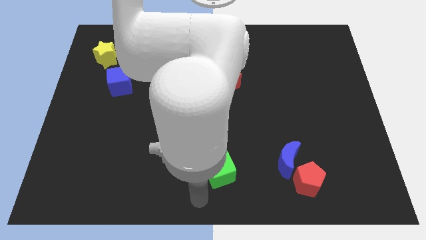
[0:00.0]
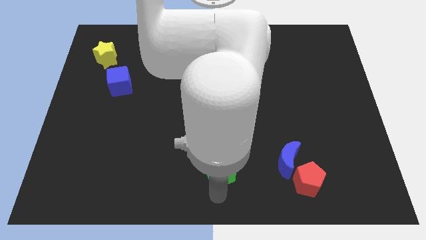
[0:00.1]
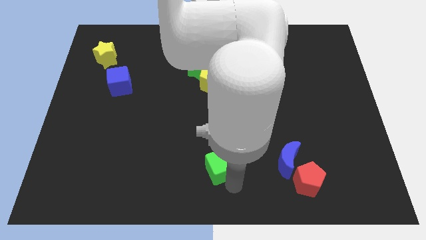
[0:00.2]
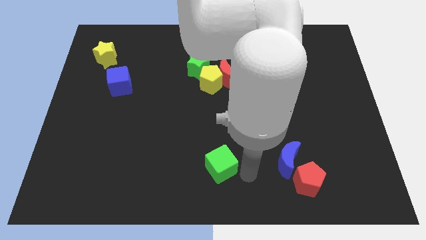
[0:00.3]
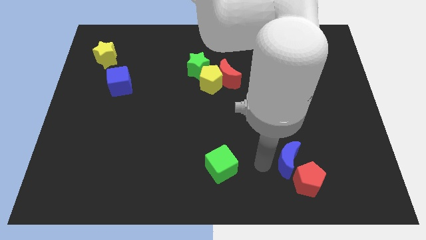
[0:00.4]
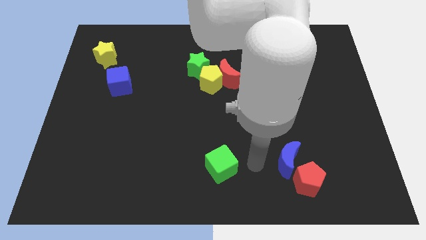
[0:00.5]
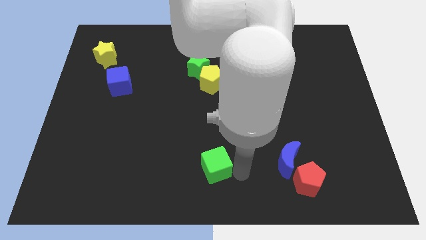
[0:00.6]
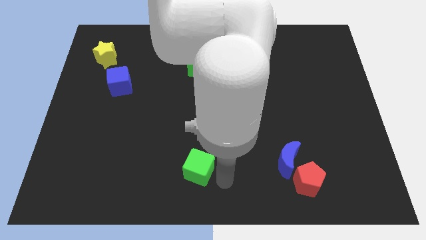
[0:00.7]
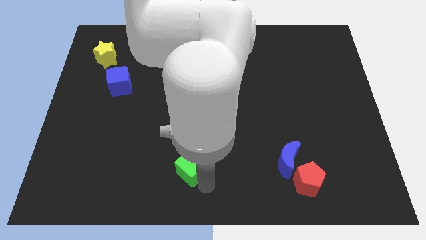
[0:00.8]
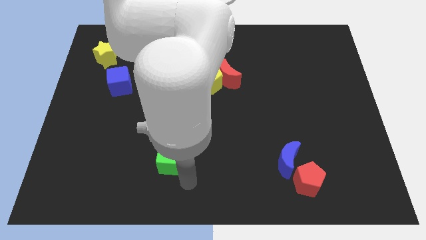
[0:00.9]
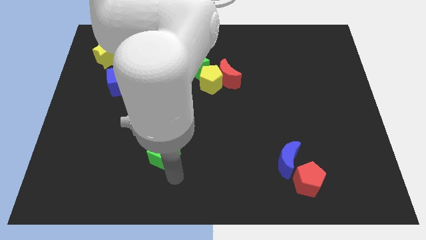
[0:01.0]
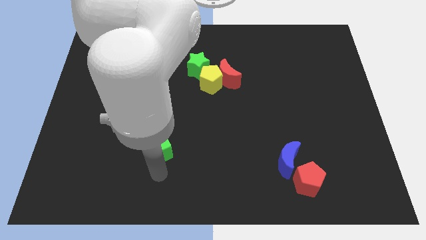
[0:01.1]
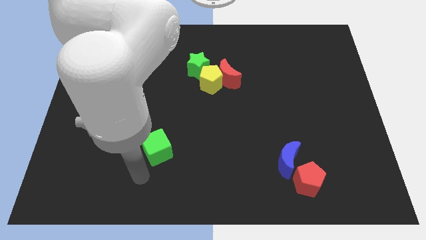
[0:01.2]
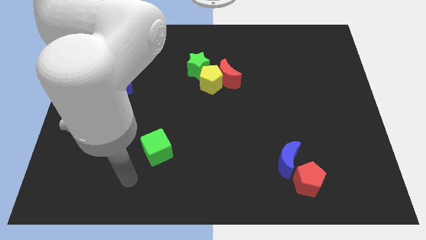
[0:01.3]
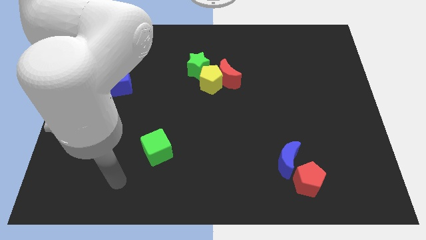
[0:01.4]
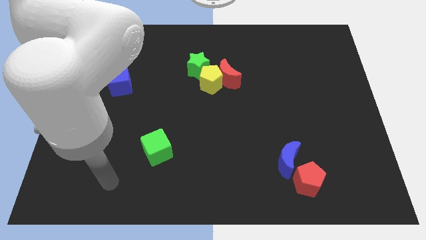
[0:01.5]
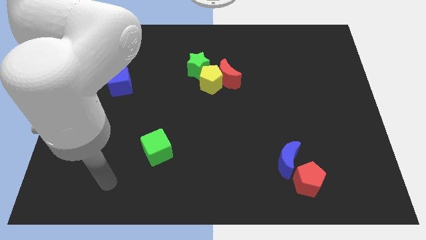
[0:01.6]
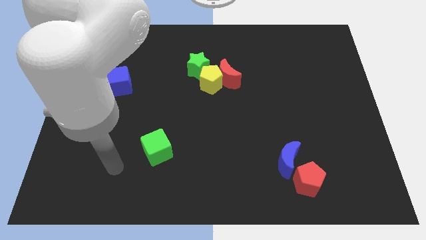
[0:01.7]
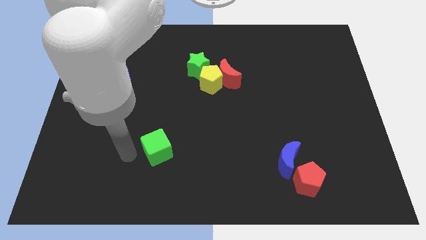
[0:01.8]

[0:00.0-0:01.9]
push the green cube towards the center left of the board

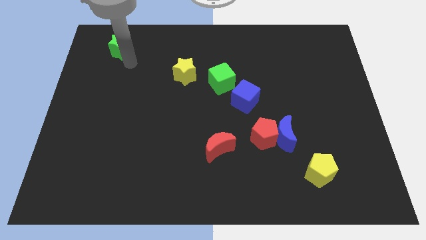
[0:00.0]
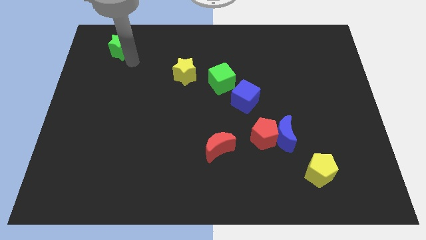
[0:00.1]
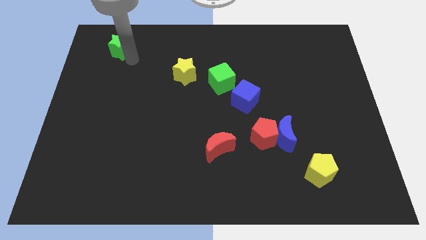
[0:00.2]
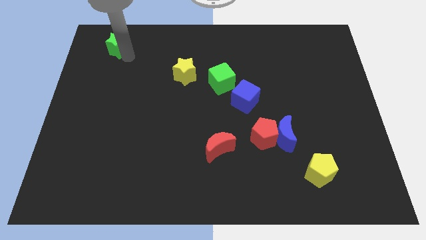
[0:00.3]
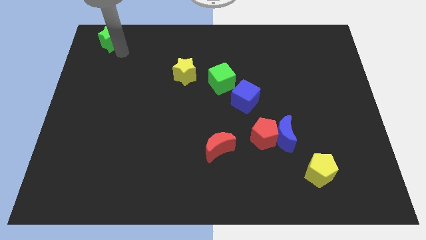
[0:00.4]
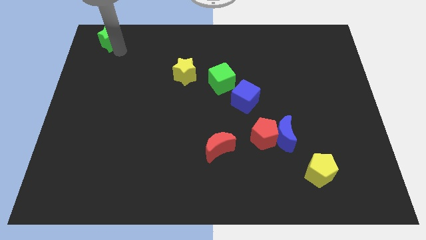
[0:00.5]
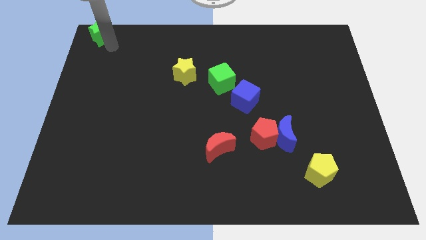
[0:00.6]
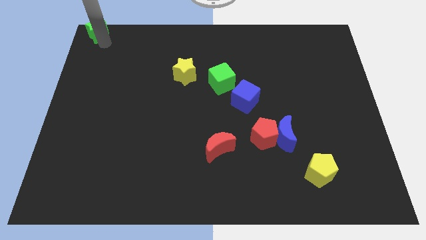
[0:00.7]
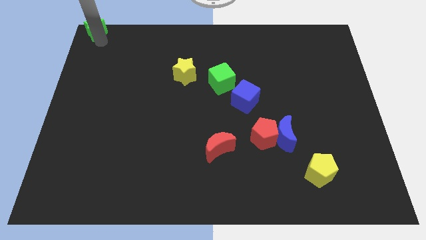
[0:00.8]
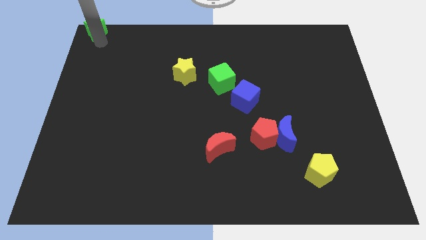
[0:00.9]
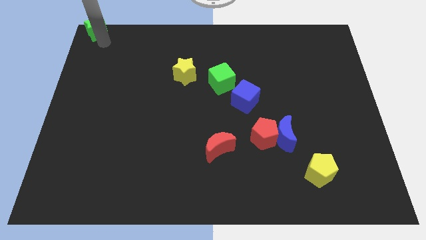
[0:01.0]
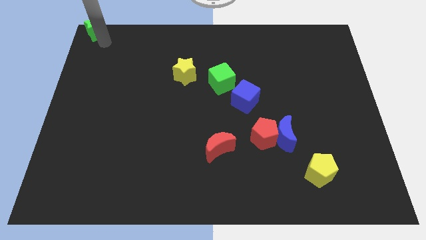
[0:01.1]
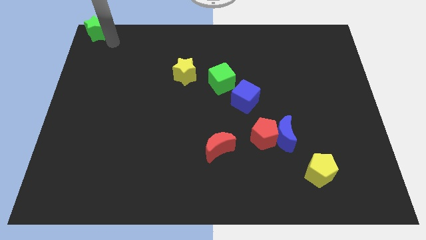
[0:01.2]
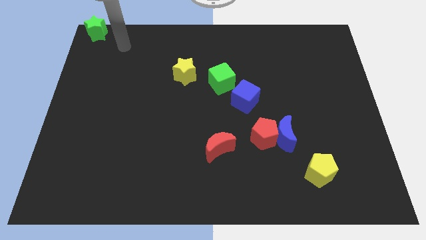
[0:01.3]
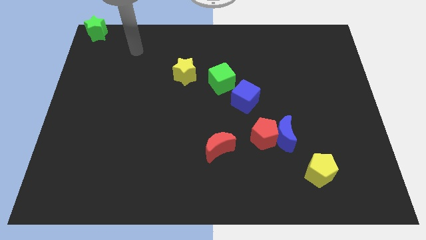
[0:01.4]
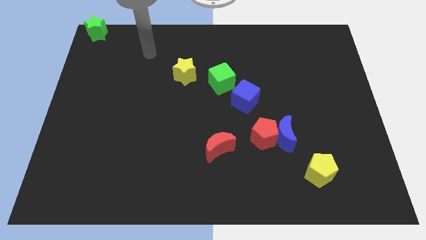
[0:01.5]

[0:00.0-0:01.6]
place the green star at the top left corner of the board

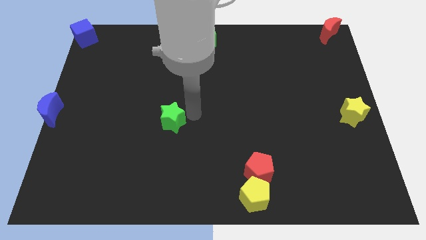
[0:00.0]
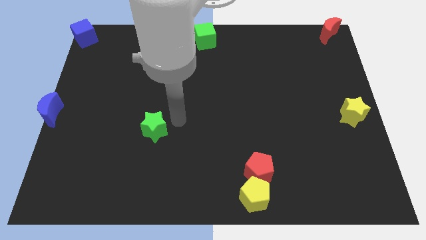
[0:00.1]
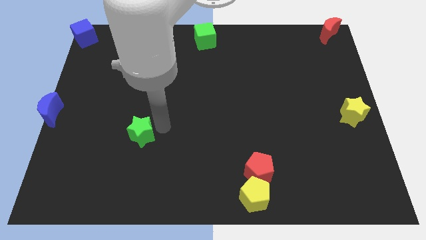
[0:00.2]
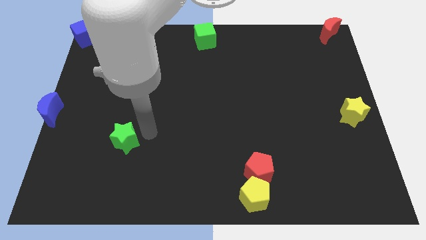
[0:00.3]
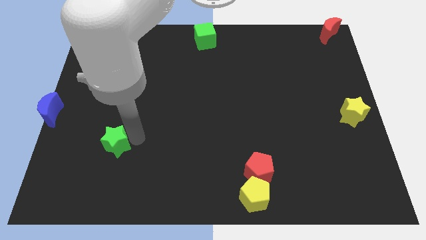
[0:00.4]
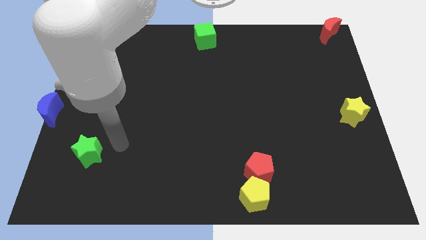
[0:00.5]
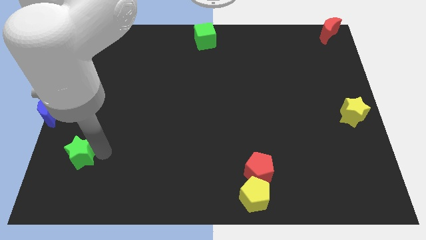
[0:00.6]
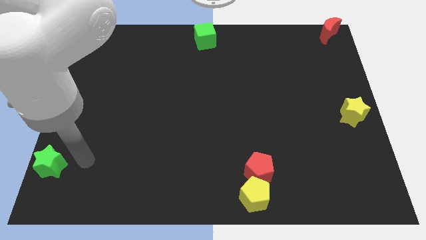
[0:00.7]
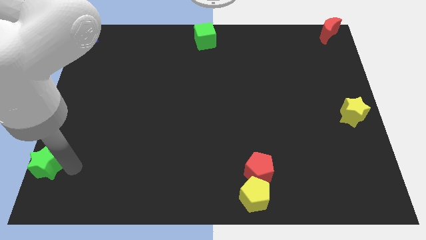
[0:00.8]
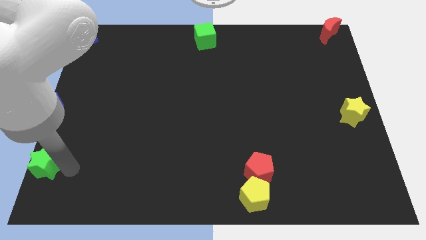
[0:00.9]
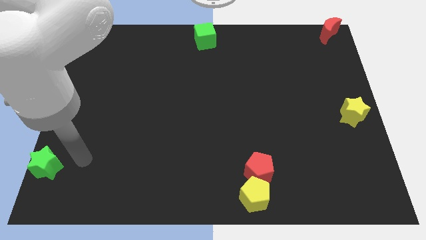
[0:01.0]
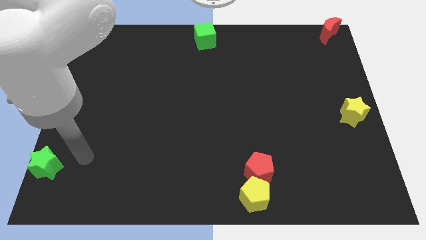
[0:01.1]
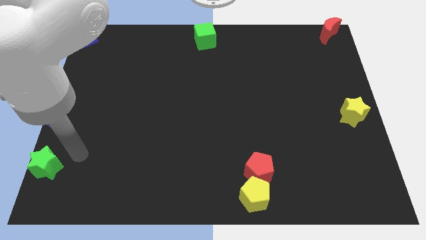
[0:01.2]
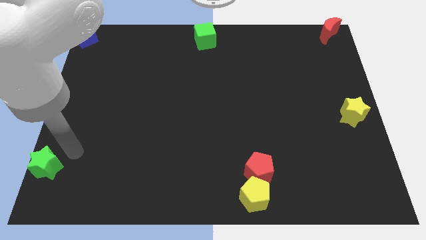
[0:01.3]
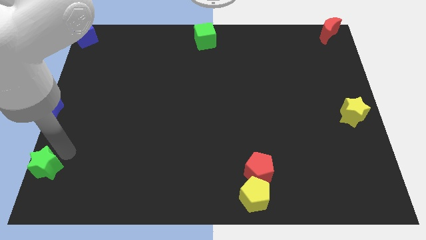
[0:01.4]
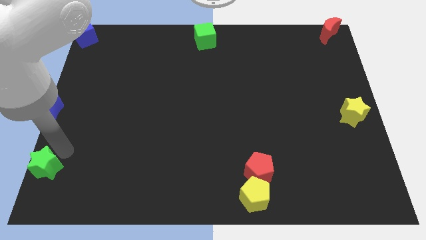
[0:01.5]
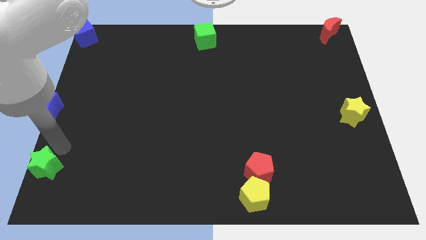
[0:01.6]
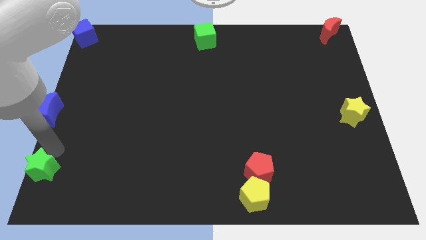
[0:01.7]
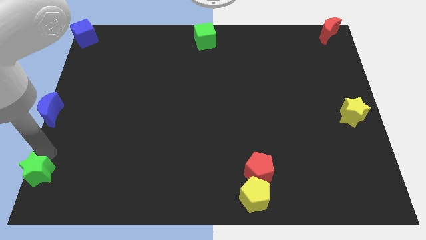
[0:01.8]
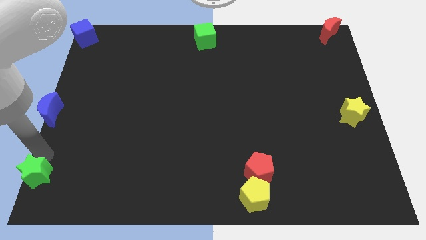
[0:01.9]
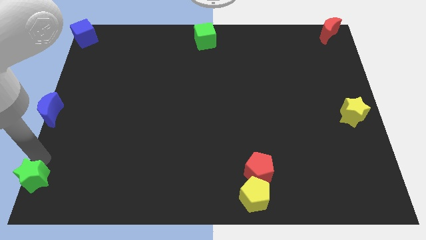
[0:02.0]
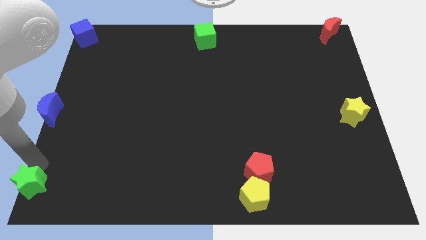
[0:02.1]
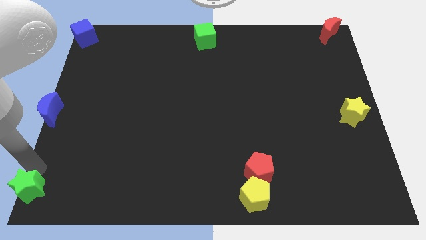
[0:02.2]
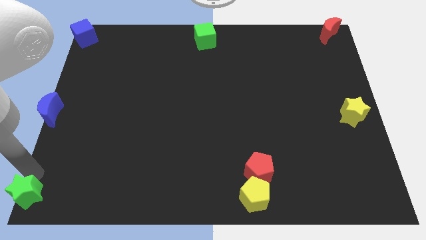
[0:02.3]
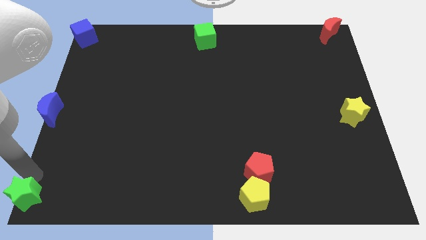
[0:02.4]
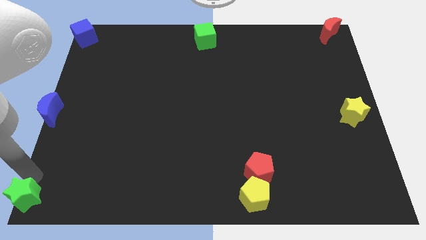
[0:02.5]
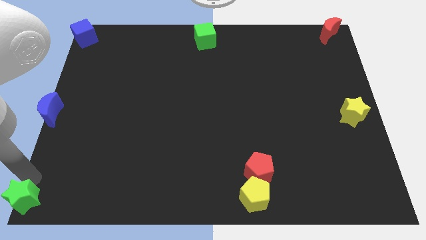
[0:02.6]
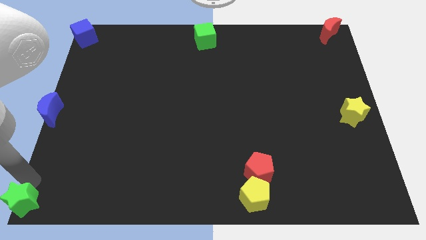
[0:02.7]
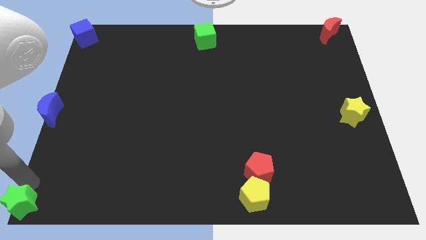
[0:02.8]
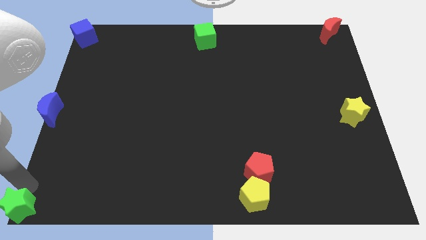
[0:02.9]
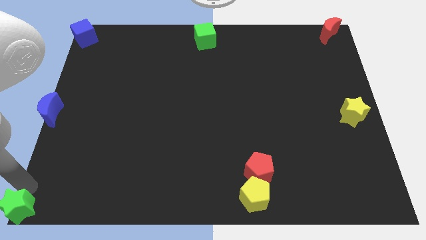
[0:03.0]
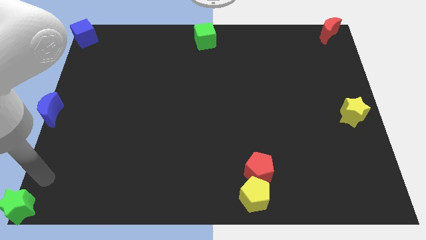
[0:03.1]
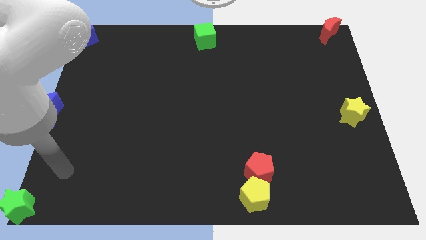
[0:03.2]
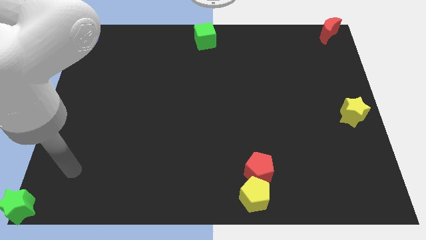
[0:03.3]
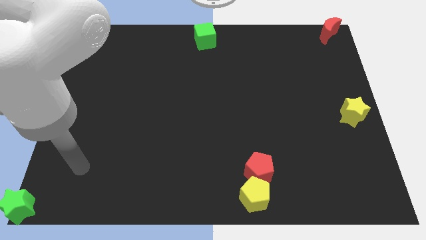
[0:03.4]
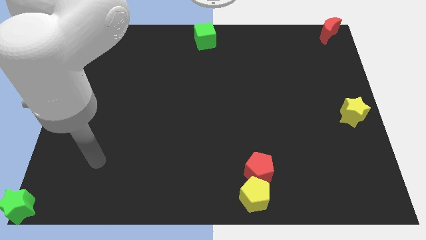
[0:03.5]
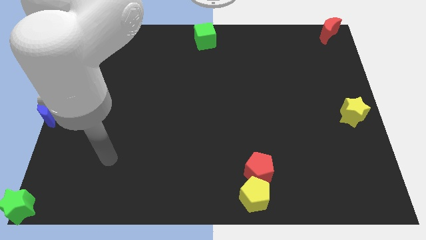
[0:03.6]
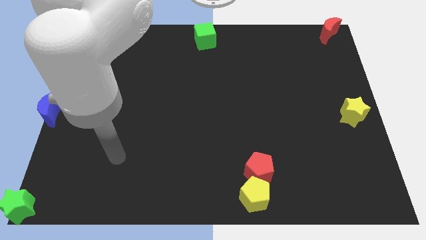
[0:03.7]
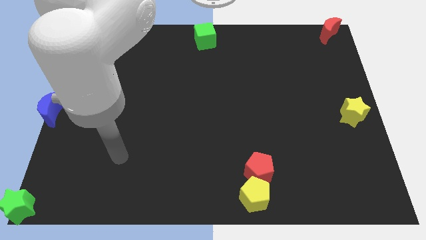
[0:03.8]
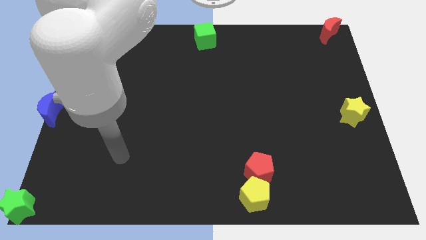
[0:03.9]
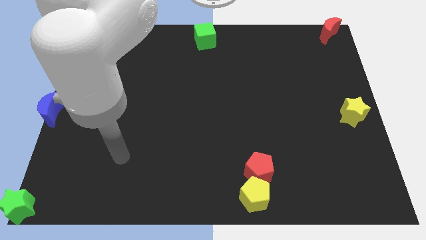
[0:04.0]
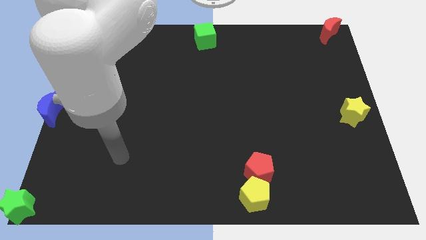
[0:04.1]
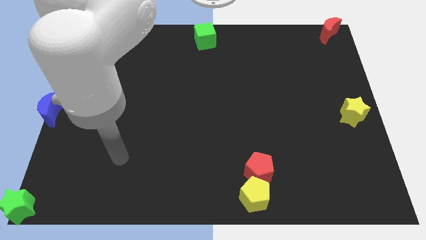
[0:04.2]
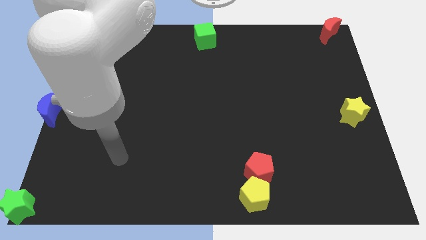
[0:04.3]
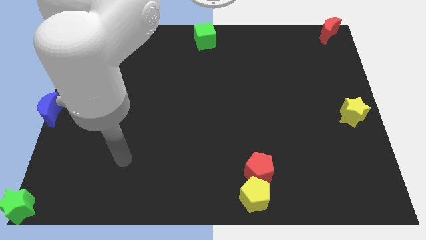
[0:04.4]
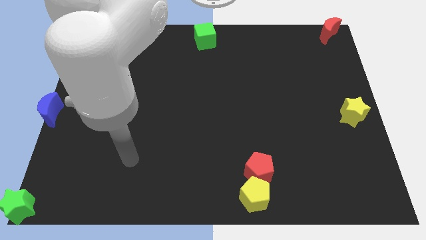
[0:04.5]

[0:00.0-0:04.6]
push the green star to the bottom left of the board

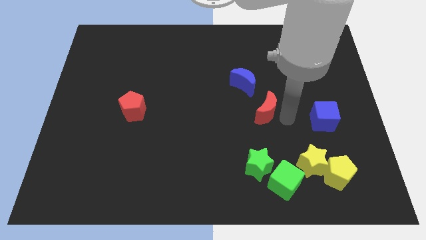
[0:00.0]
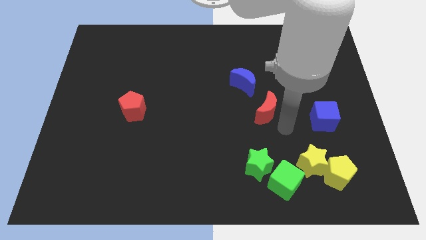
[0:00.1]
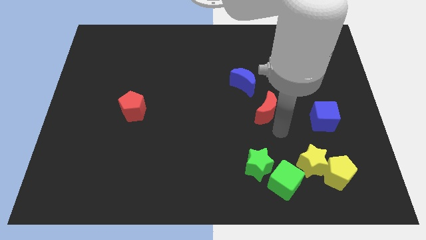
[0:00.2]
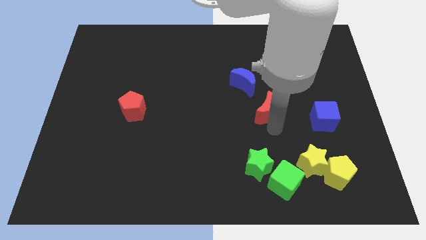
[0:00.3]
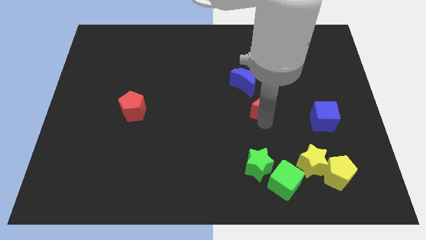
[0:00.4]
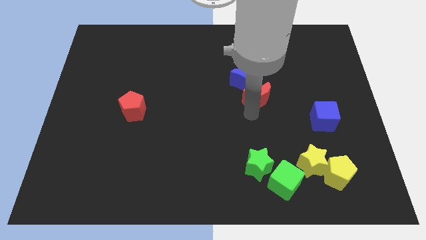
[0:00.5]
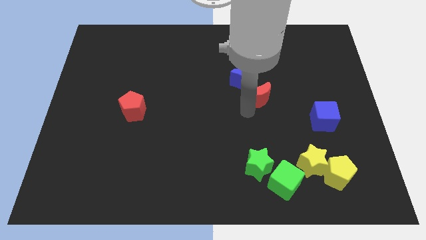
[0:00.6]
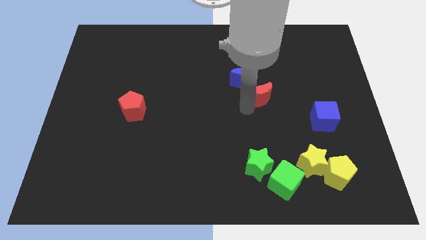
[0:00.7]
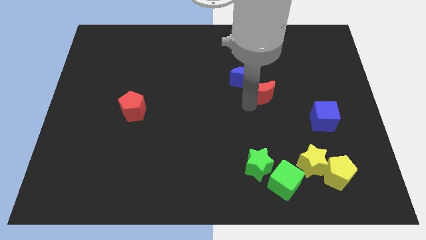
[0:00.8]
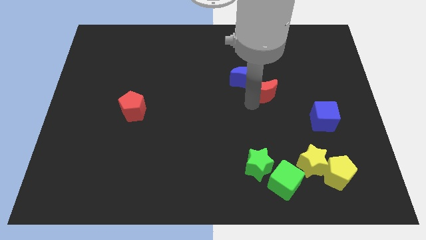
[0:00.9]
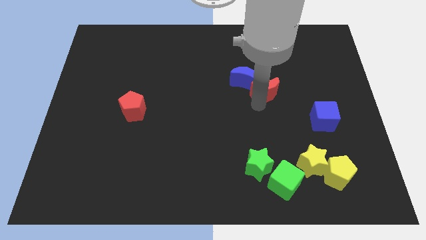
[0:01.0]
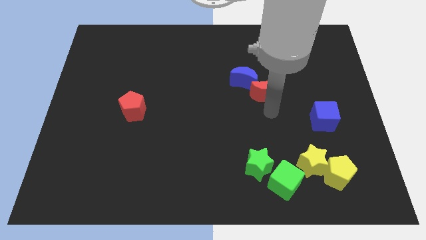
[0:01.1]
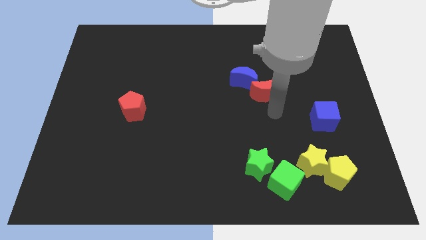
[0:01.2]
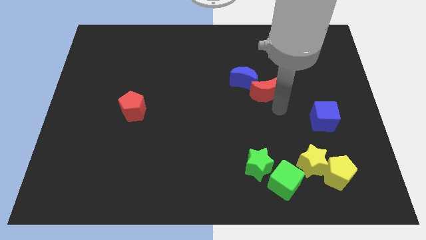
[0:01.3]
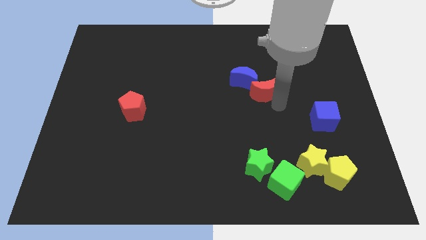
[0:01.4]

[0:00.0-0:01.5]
push the red crescent to the bottom right side of the blue crescent
